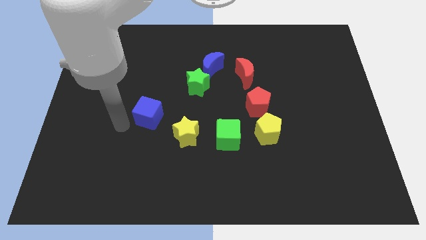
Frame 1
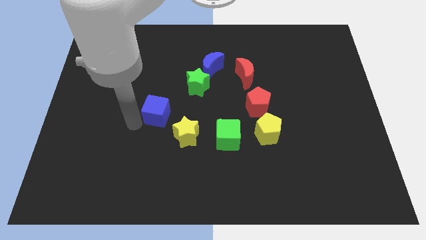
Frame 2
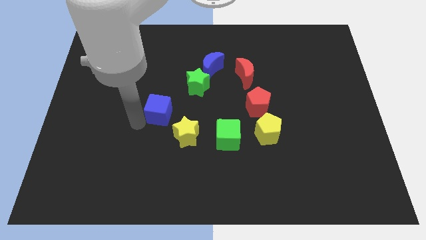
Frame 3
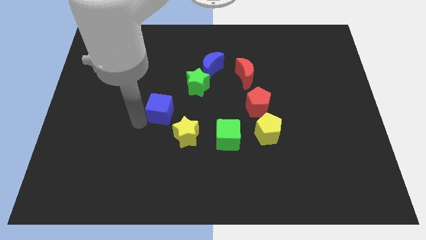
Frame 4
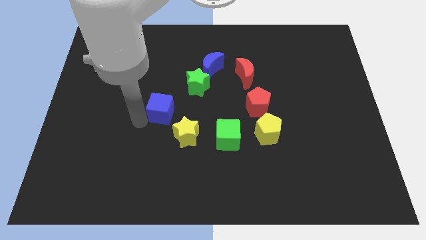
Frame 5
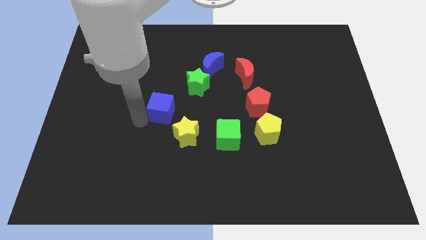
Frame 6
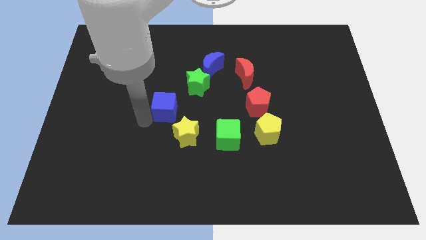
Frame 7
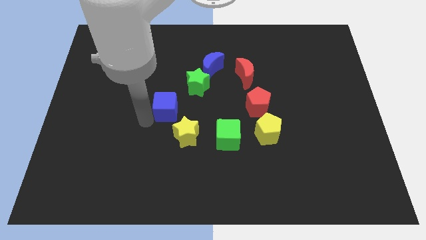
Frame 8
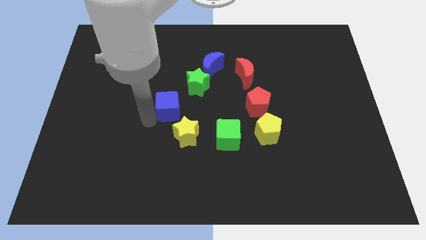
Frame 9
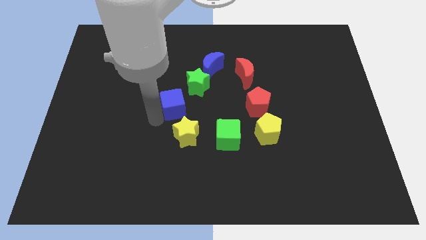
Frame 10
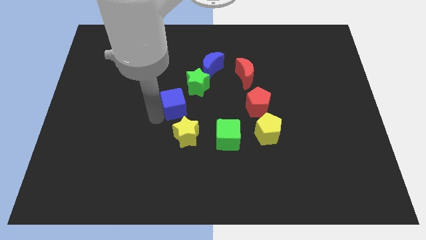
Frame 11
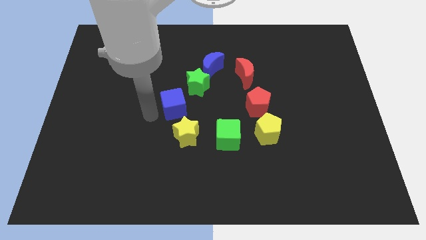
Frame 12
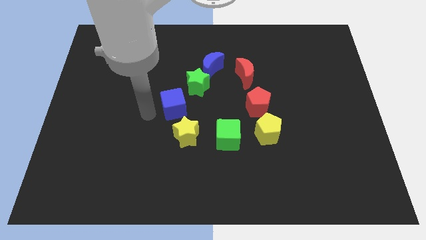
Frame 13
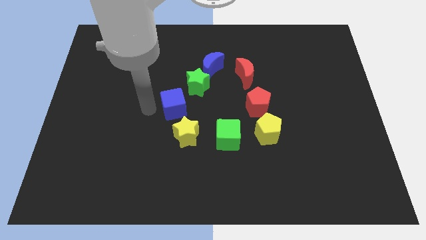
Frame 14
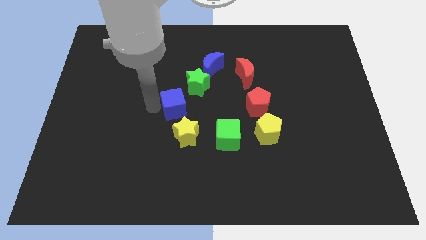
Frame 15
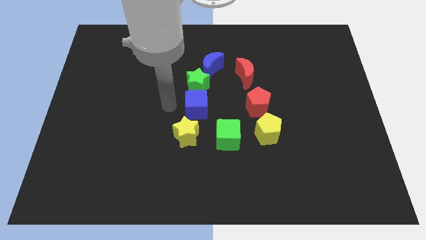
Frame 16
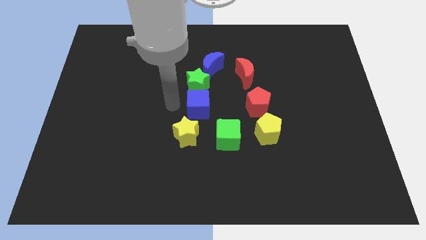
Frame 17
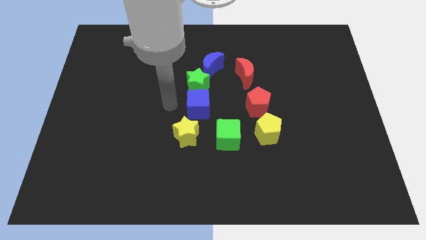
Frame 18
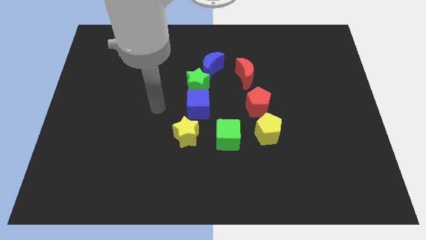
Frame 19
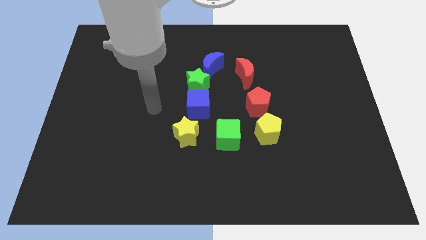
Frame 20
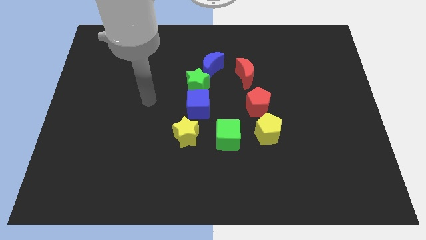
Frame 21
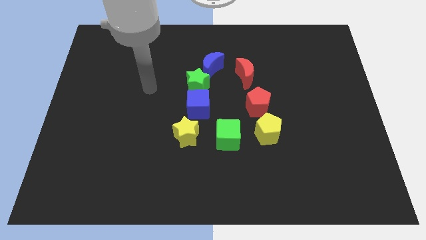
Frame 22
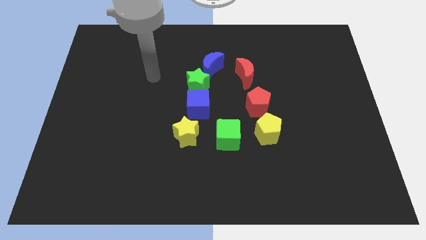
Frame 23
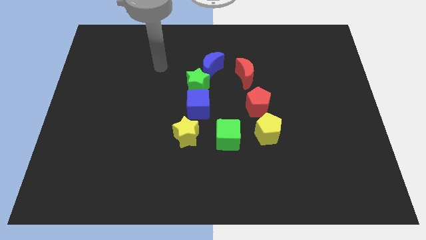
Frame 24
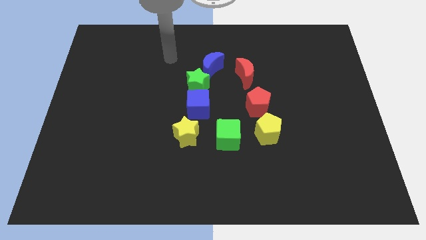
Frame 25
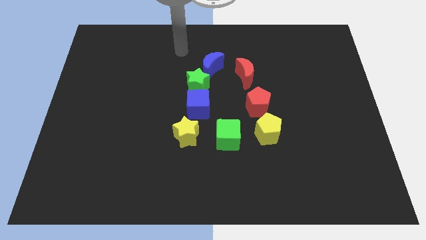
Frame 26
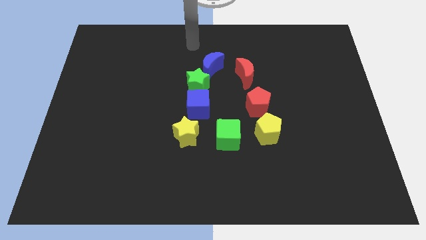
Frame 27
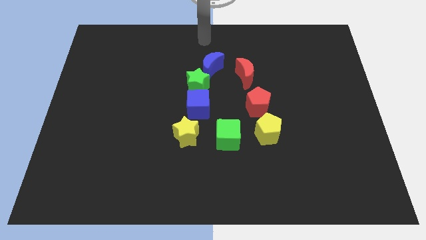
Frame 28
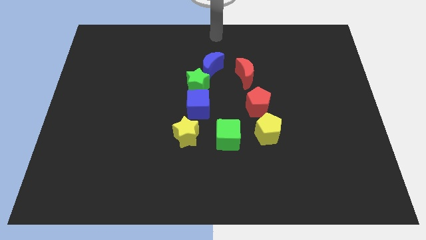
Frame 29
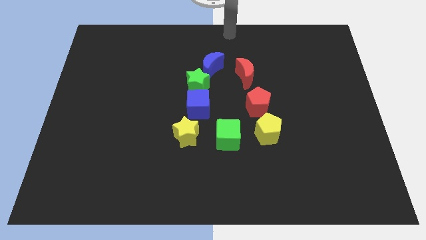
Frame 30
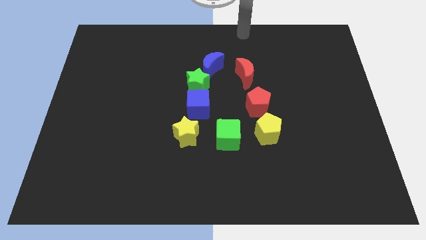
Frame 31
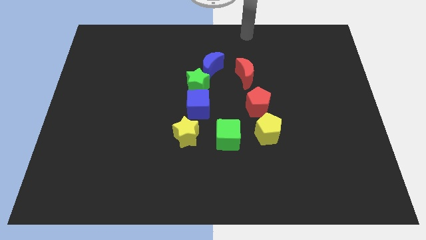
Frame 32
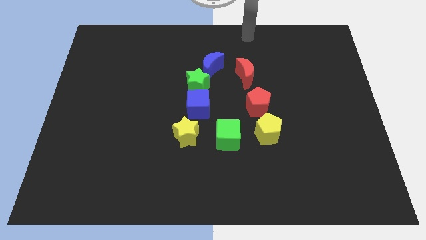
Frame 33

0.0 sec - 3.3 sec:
slide the blue cube to the bottom of the green star

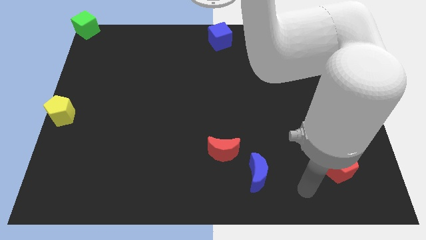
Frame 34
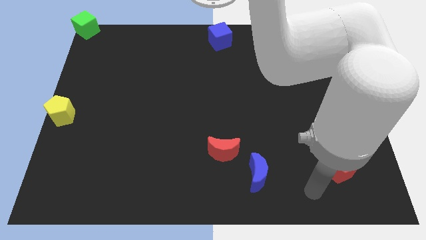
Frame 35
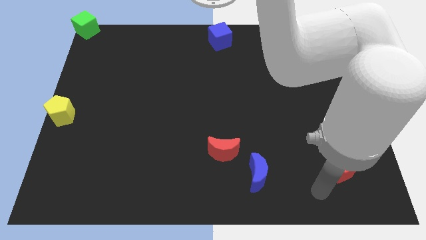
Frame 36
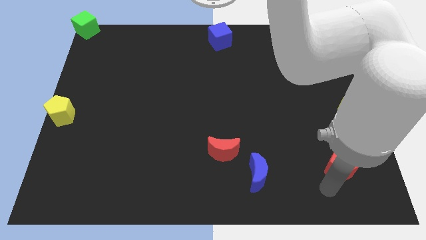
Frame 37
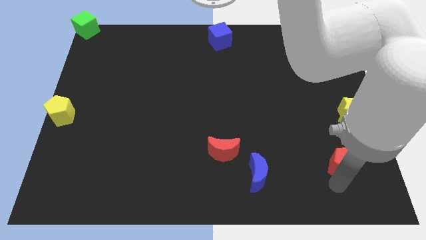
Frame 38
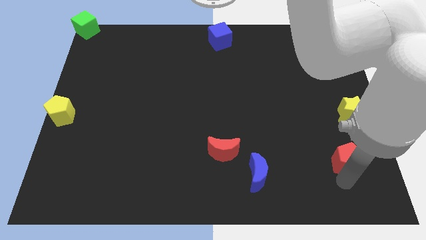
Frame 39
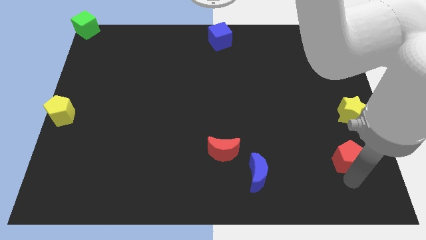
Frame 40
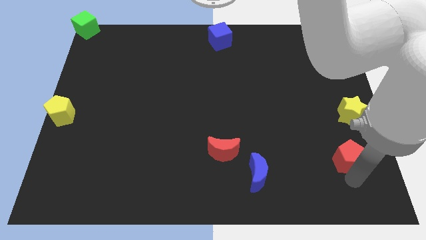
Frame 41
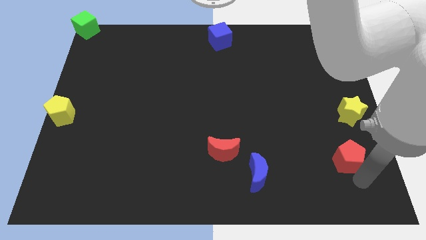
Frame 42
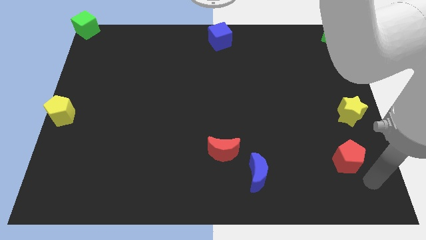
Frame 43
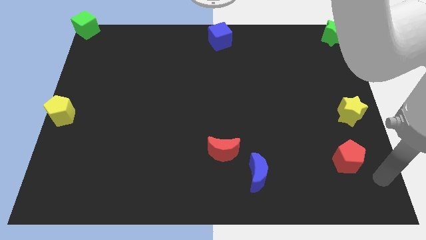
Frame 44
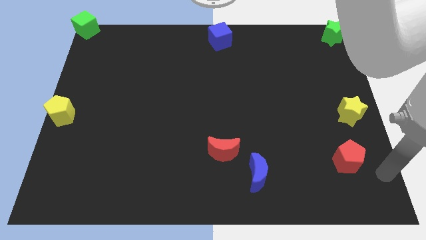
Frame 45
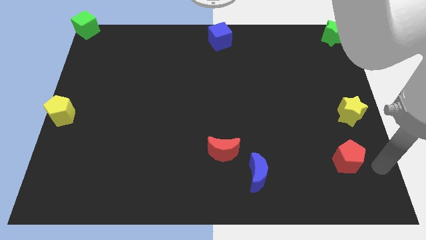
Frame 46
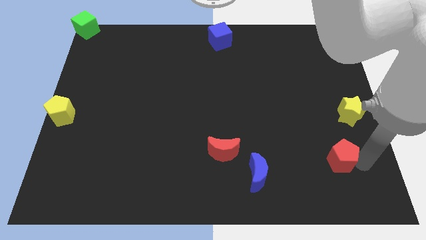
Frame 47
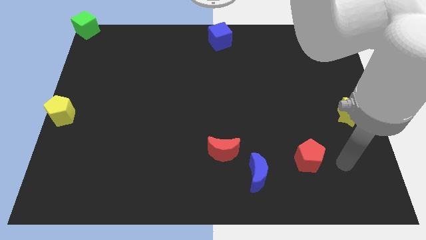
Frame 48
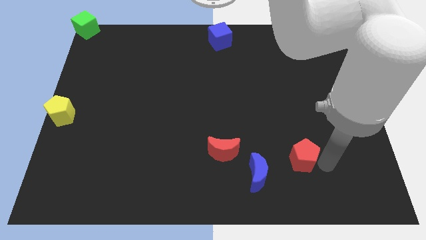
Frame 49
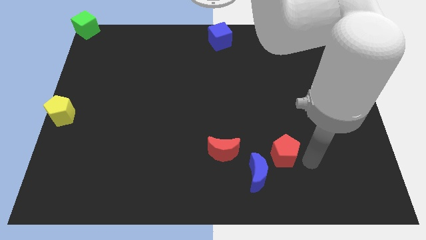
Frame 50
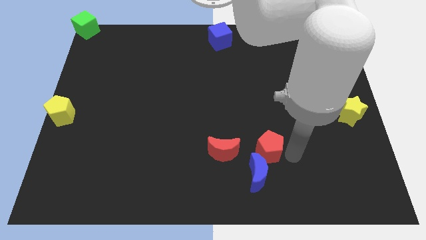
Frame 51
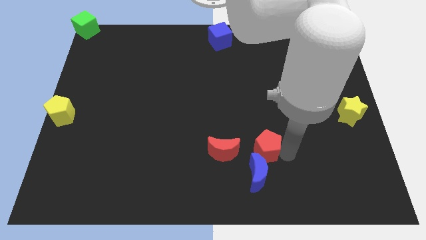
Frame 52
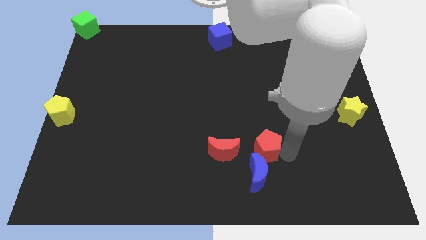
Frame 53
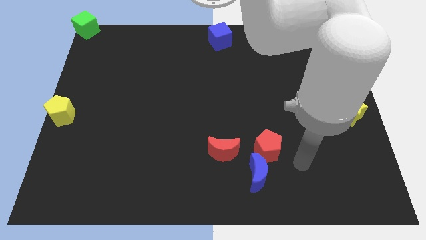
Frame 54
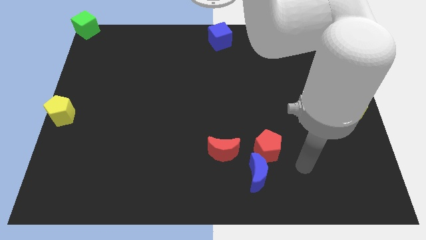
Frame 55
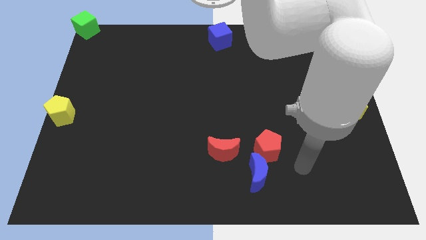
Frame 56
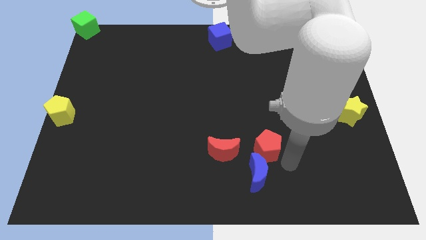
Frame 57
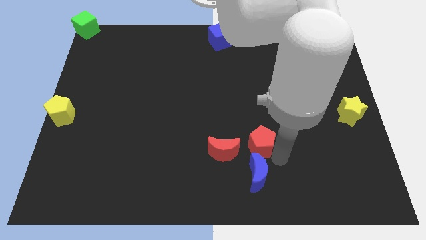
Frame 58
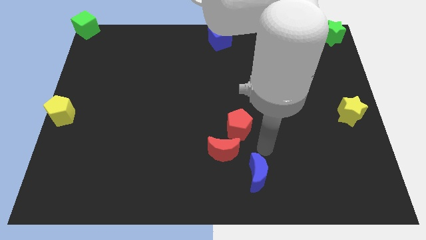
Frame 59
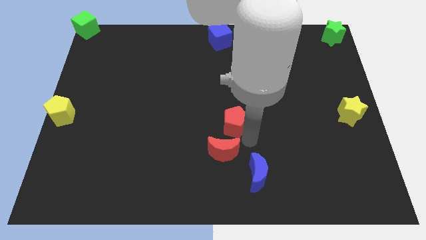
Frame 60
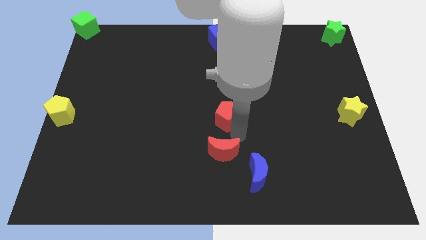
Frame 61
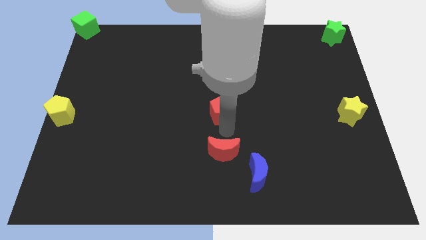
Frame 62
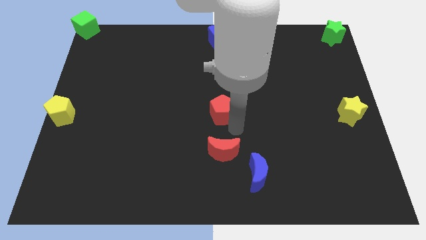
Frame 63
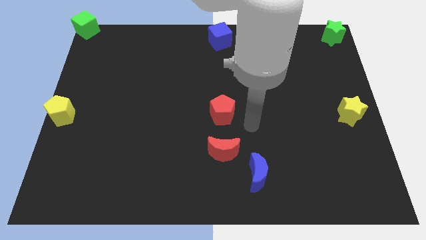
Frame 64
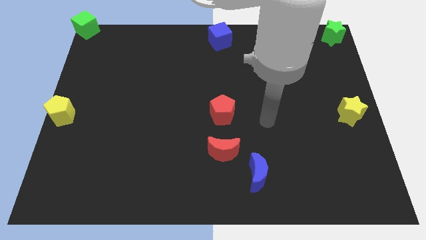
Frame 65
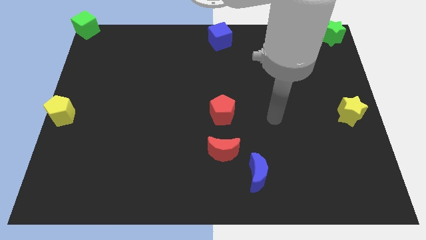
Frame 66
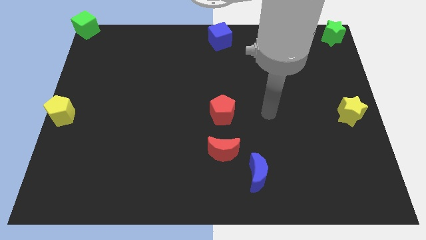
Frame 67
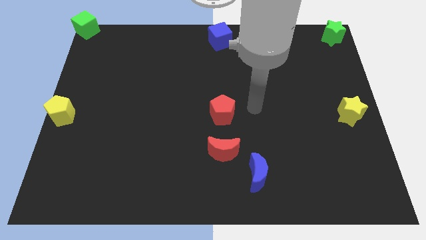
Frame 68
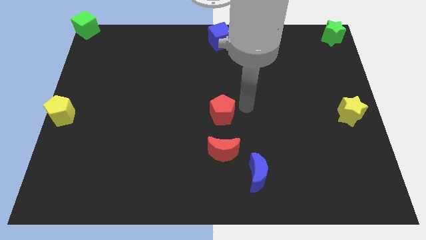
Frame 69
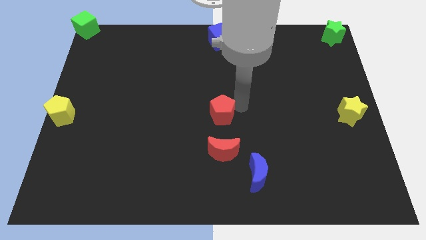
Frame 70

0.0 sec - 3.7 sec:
place the red pentagon to the center

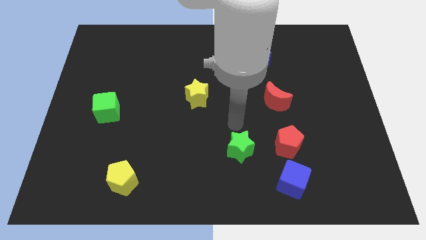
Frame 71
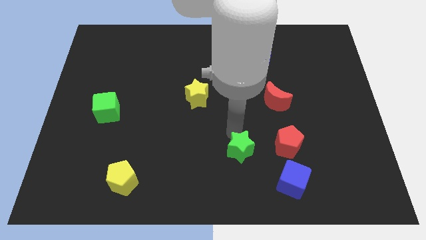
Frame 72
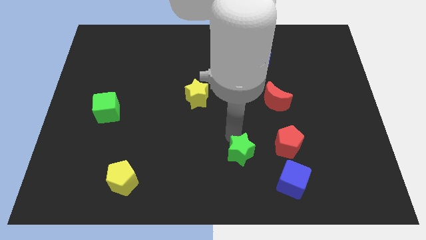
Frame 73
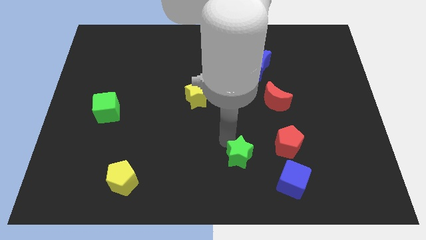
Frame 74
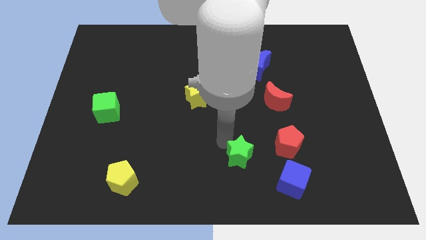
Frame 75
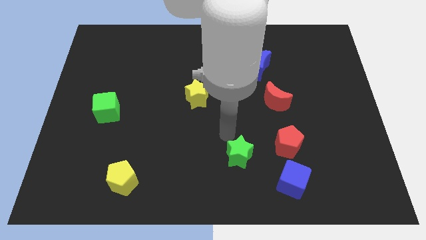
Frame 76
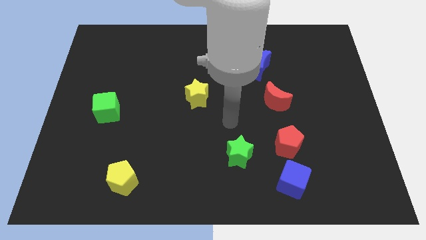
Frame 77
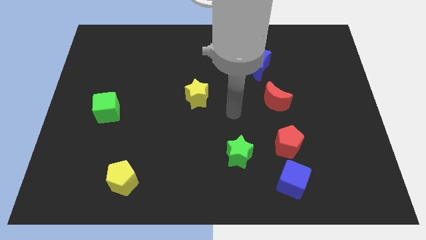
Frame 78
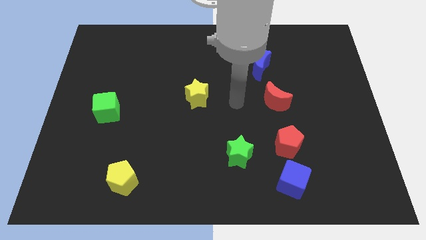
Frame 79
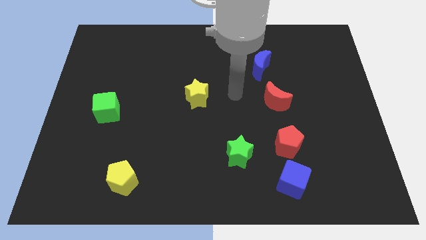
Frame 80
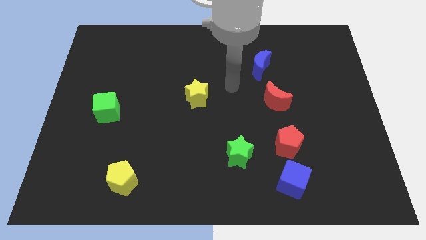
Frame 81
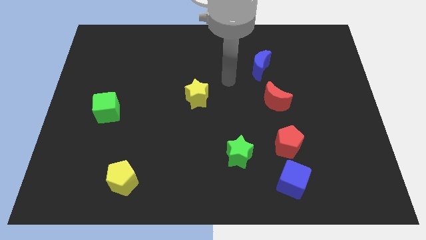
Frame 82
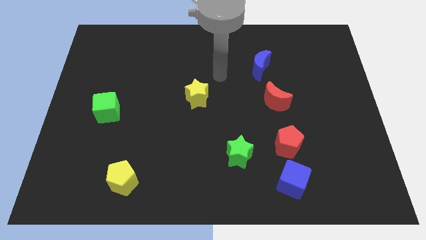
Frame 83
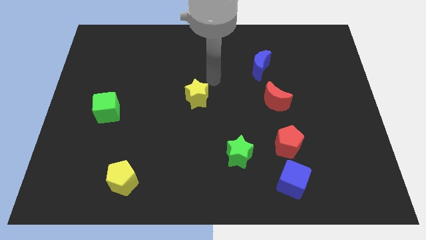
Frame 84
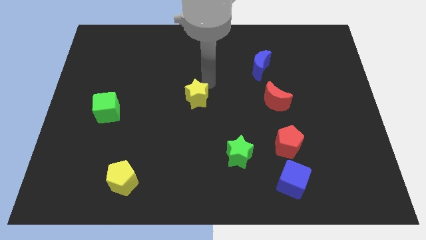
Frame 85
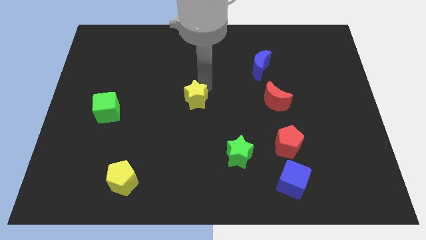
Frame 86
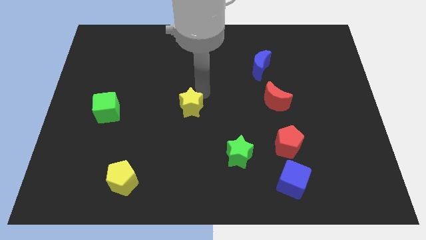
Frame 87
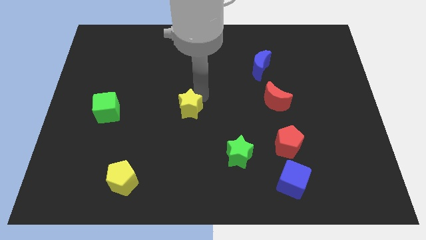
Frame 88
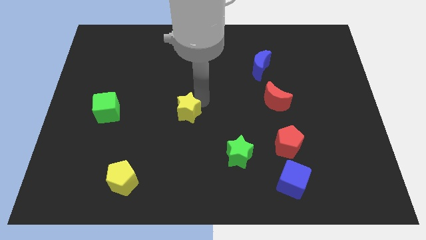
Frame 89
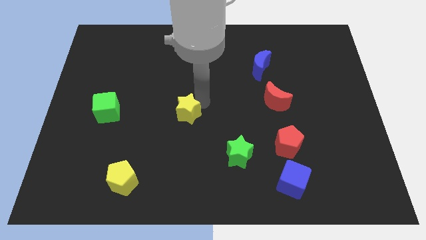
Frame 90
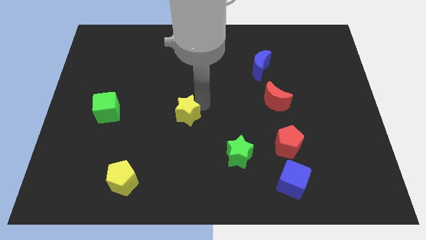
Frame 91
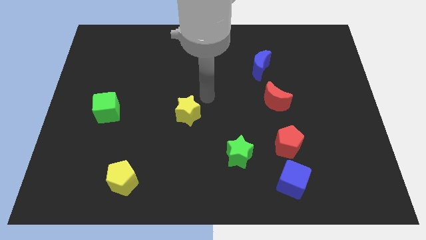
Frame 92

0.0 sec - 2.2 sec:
push the yellow star and green star towards bottom side
